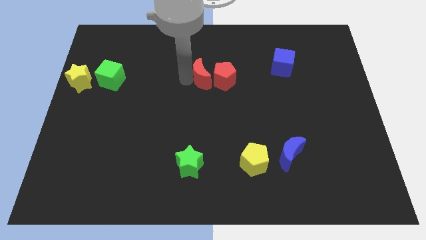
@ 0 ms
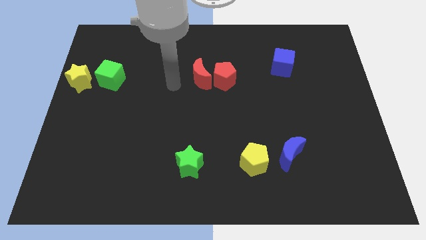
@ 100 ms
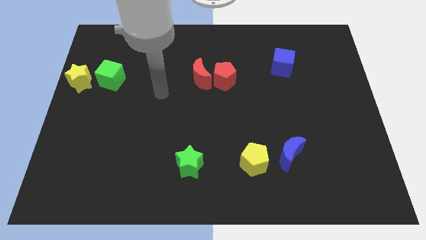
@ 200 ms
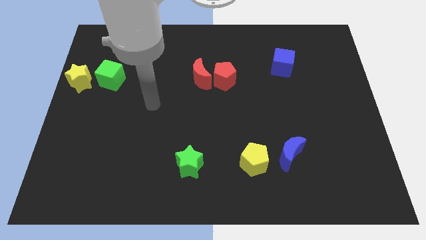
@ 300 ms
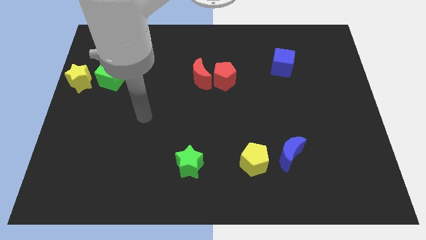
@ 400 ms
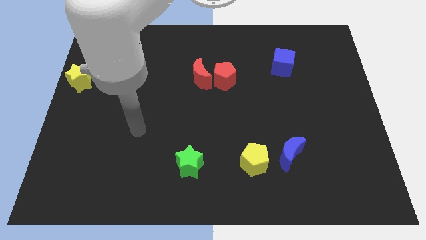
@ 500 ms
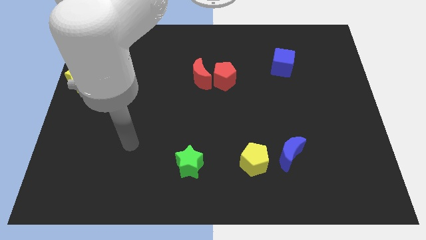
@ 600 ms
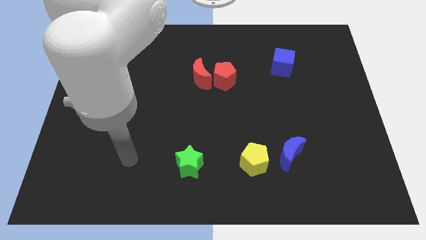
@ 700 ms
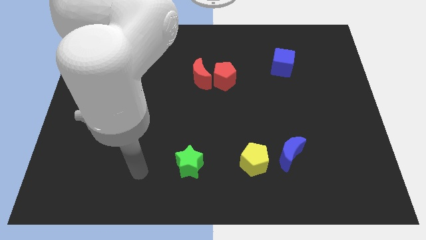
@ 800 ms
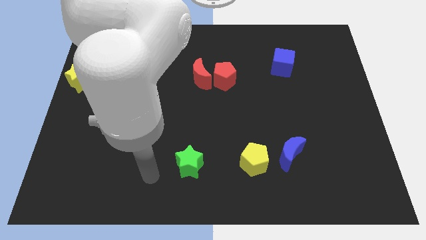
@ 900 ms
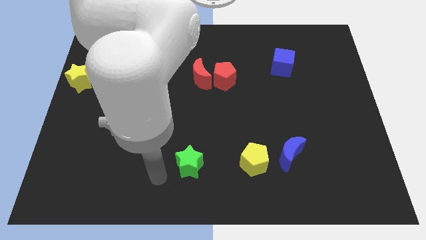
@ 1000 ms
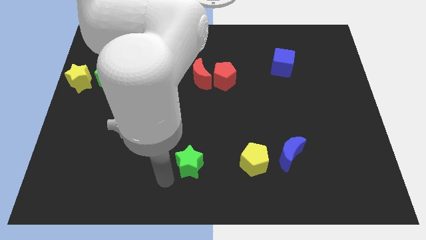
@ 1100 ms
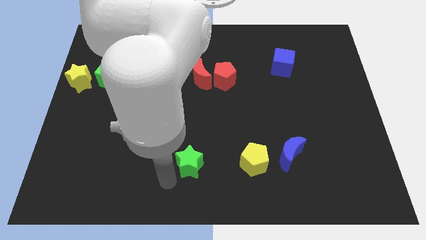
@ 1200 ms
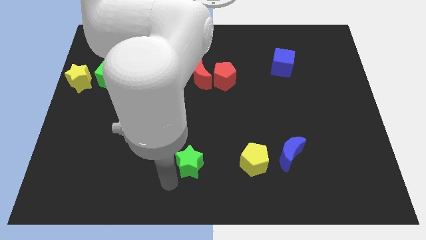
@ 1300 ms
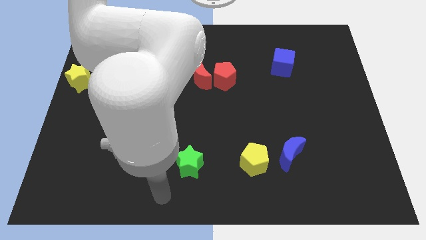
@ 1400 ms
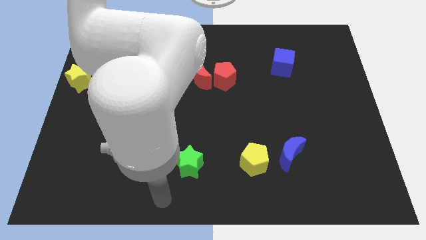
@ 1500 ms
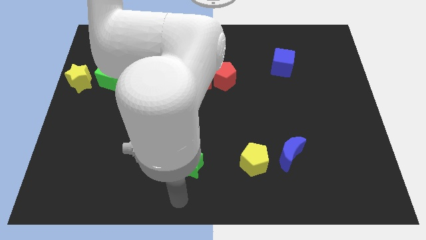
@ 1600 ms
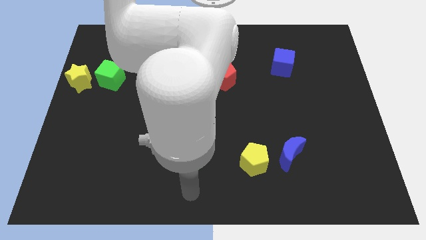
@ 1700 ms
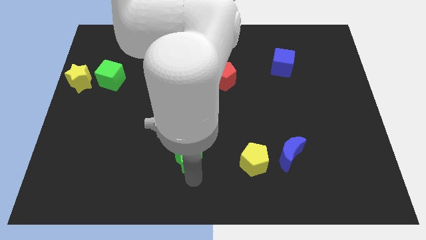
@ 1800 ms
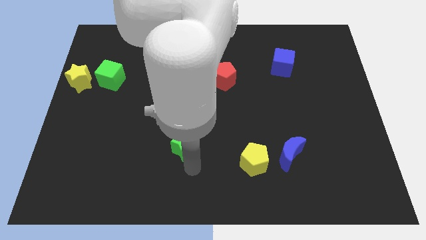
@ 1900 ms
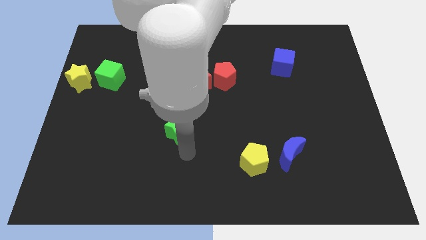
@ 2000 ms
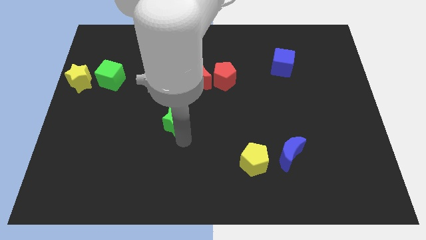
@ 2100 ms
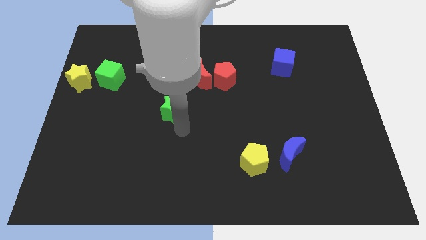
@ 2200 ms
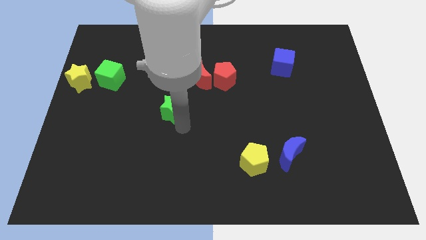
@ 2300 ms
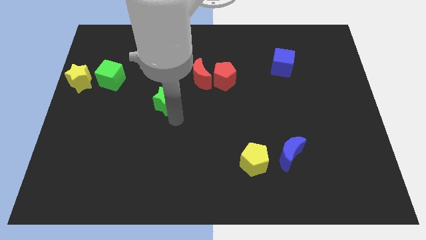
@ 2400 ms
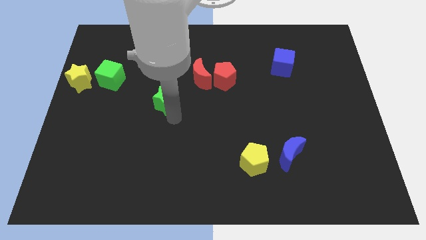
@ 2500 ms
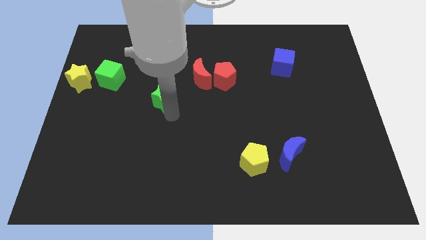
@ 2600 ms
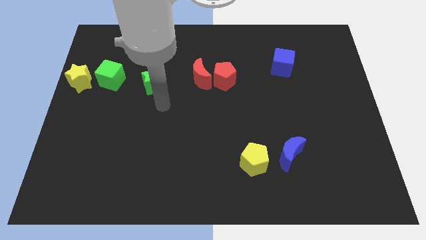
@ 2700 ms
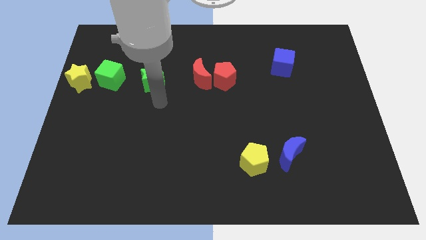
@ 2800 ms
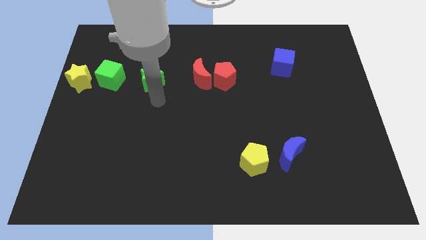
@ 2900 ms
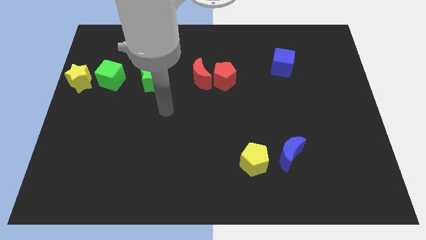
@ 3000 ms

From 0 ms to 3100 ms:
place the green star to the left of the red crescent

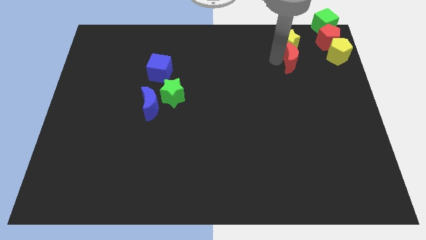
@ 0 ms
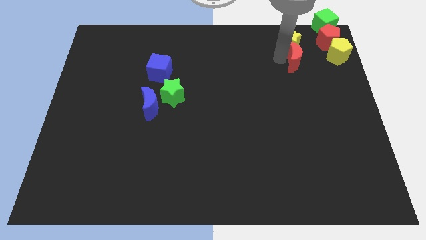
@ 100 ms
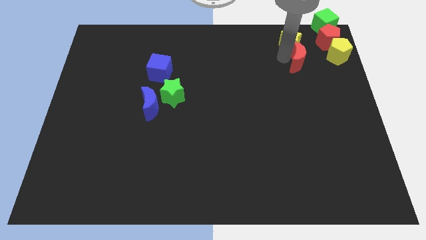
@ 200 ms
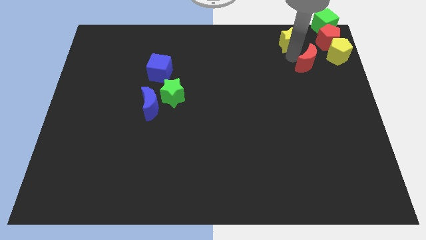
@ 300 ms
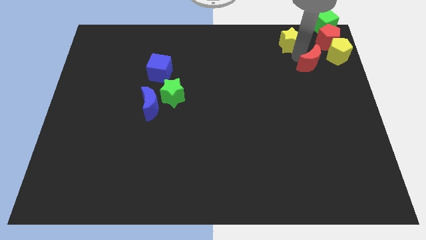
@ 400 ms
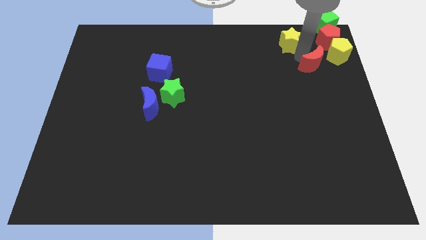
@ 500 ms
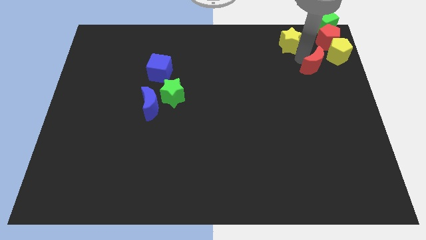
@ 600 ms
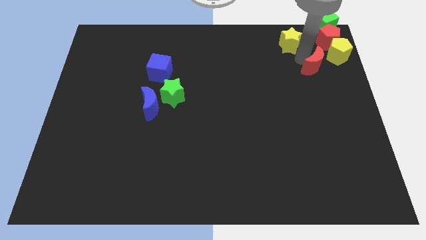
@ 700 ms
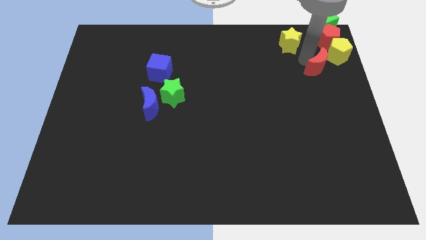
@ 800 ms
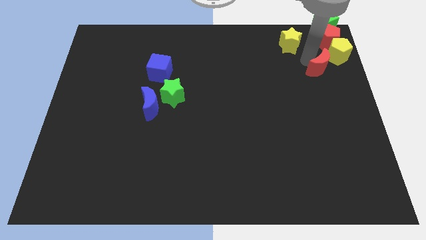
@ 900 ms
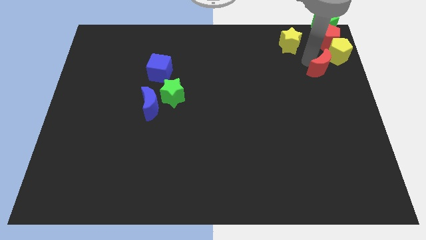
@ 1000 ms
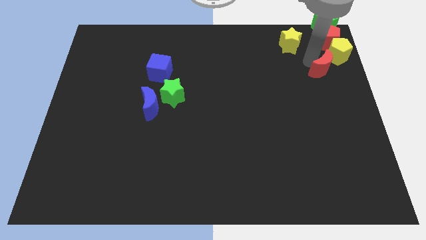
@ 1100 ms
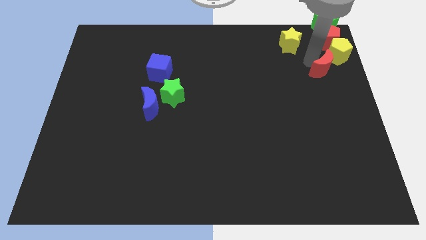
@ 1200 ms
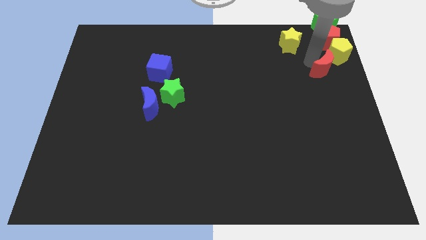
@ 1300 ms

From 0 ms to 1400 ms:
separate red moon from the yellow star

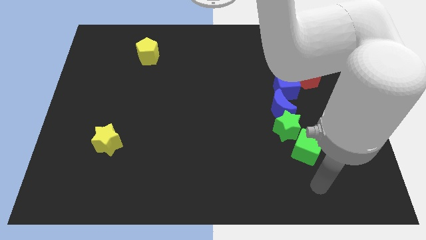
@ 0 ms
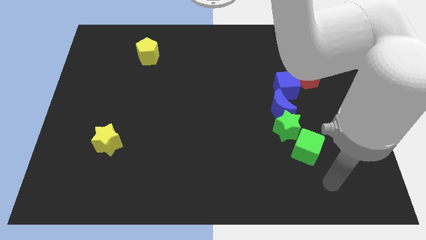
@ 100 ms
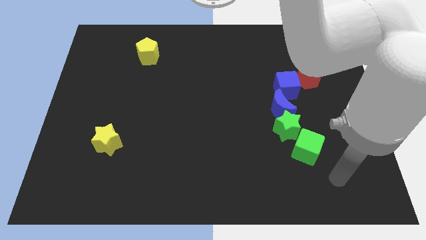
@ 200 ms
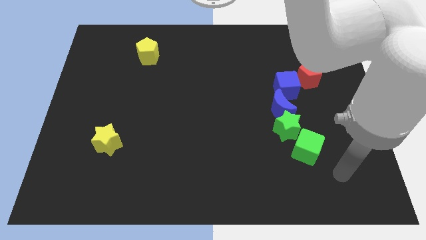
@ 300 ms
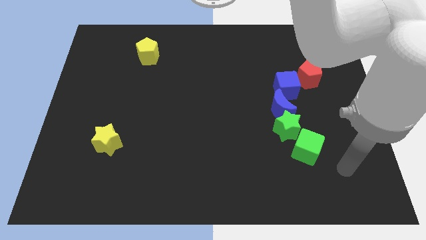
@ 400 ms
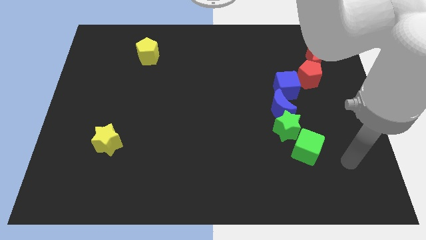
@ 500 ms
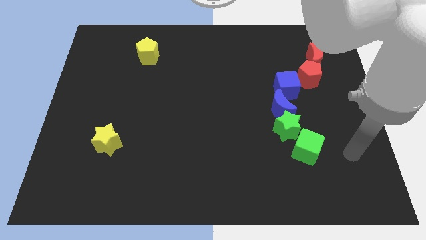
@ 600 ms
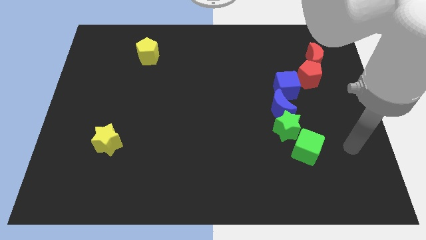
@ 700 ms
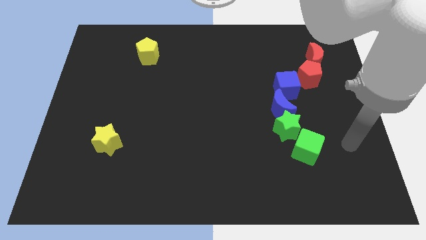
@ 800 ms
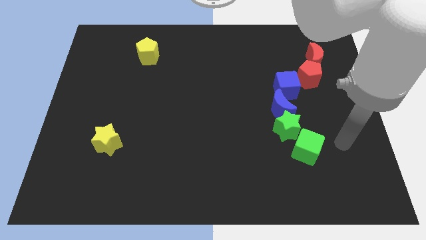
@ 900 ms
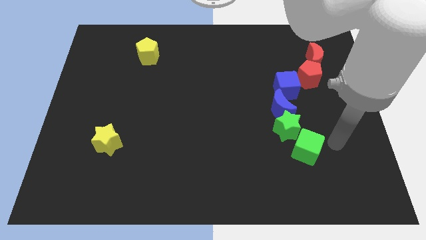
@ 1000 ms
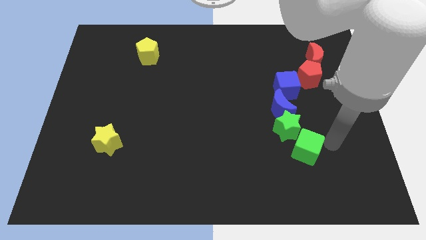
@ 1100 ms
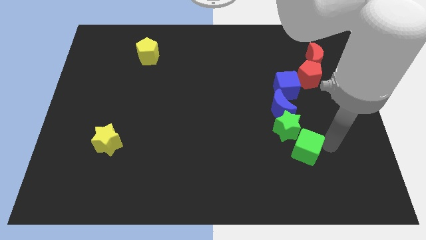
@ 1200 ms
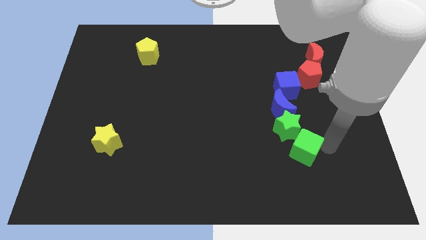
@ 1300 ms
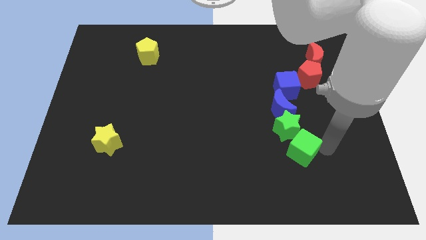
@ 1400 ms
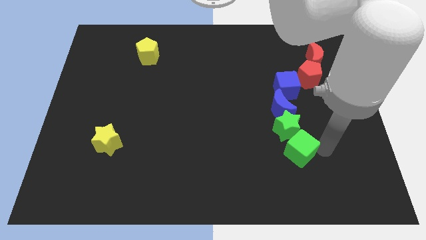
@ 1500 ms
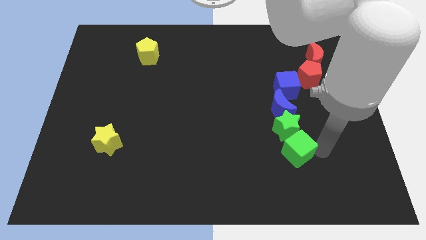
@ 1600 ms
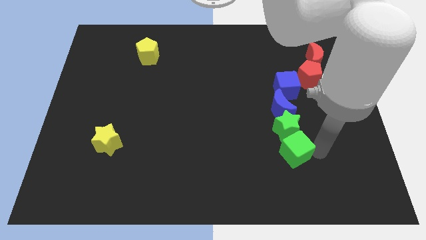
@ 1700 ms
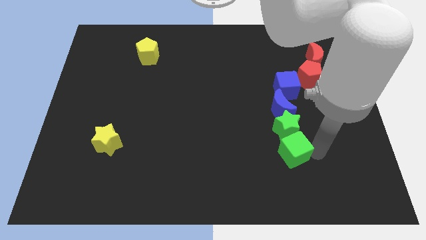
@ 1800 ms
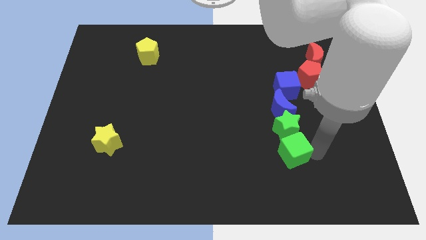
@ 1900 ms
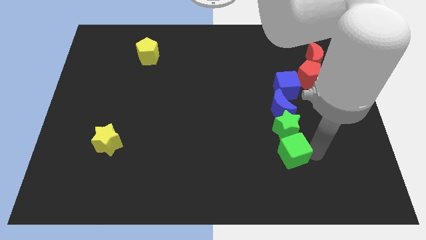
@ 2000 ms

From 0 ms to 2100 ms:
push the green cube under to the green star

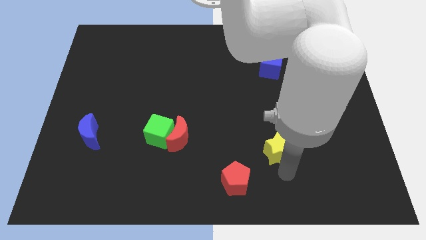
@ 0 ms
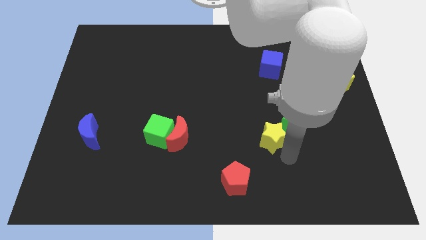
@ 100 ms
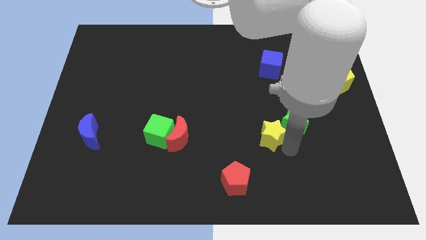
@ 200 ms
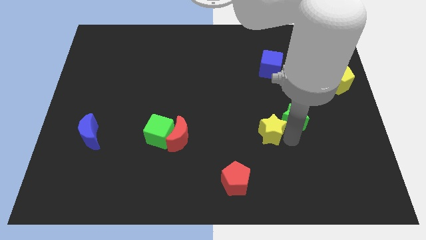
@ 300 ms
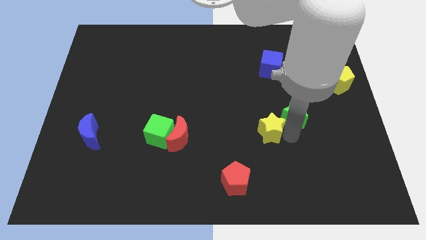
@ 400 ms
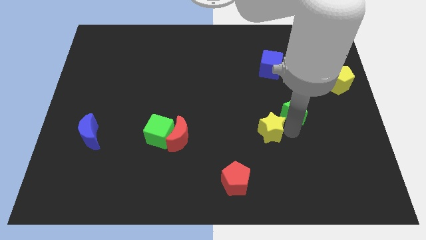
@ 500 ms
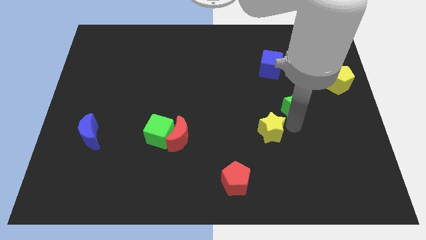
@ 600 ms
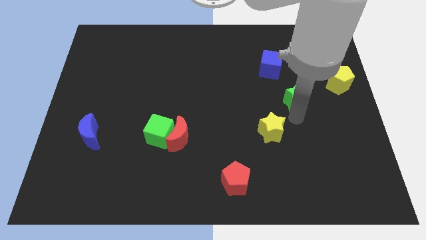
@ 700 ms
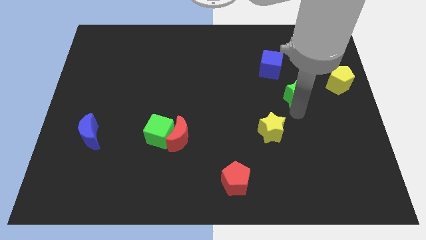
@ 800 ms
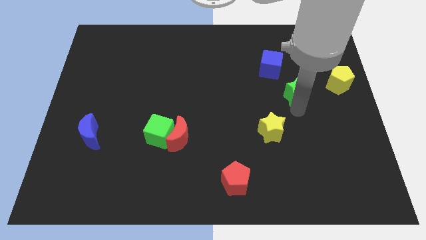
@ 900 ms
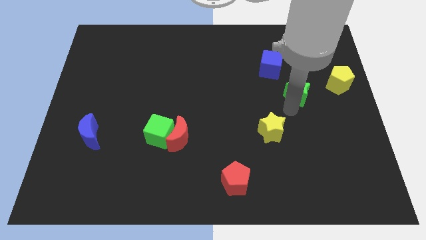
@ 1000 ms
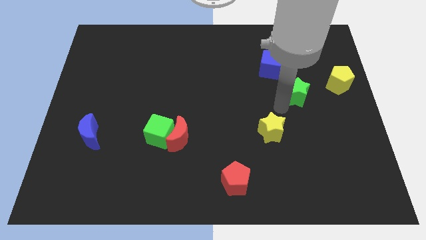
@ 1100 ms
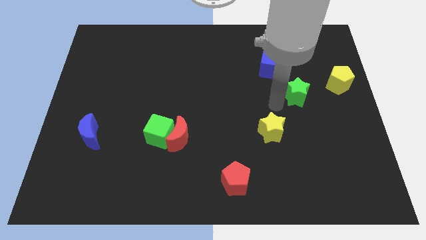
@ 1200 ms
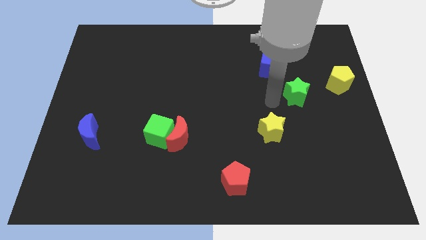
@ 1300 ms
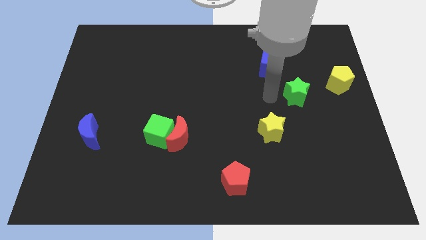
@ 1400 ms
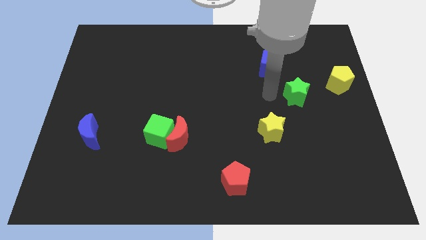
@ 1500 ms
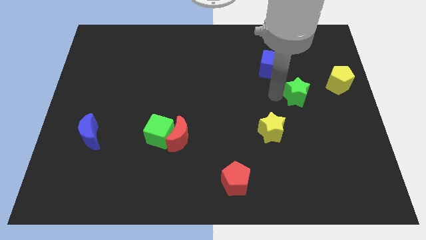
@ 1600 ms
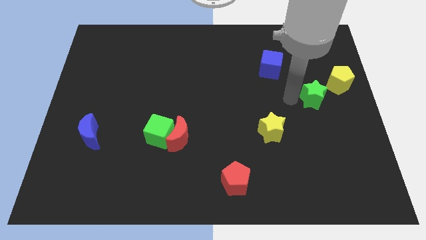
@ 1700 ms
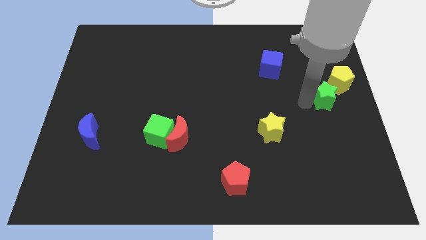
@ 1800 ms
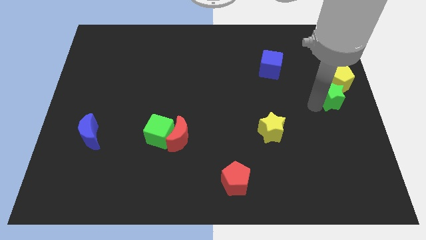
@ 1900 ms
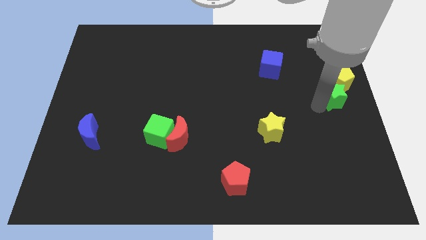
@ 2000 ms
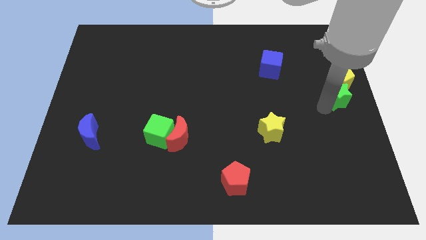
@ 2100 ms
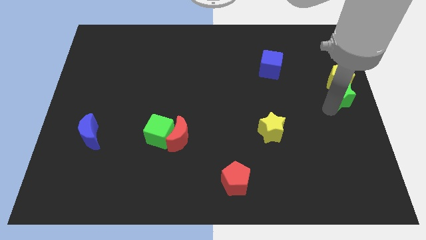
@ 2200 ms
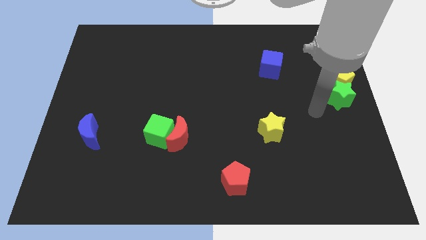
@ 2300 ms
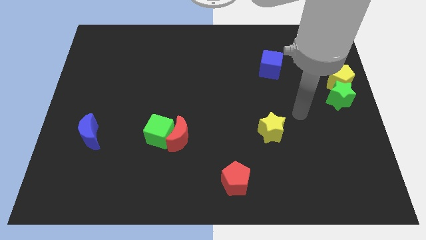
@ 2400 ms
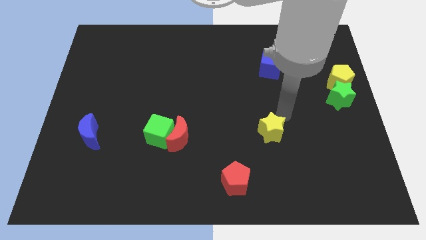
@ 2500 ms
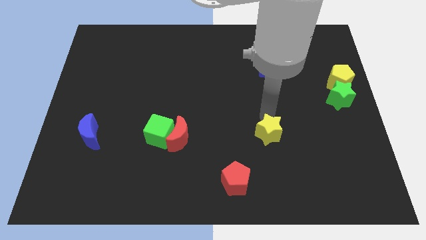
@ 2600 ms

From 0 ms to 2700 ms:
place the green star to the bottom of yellow pentagon
